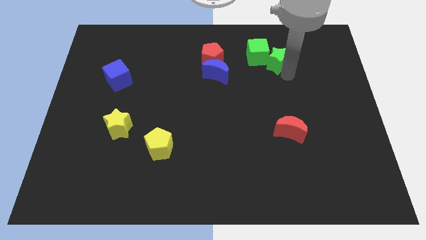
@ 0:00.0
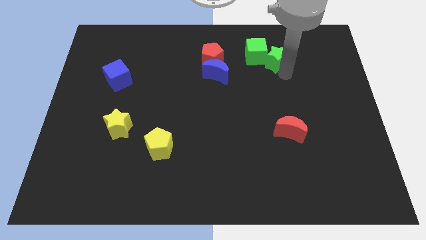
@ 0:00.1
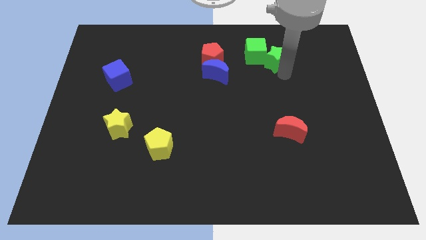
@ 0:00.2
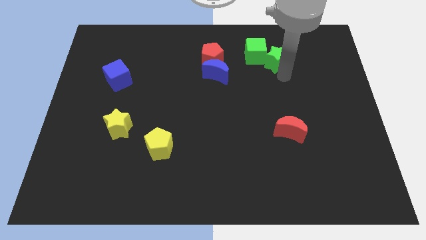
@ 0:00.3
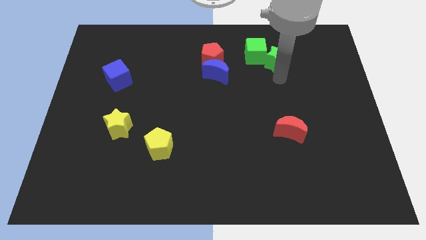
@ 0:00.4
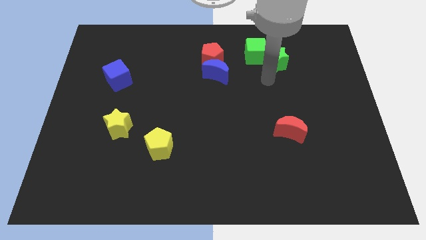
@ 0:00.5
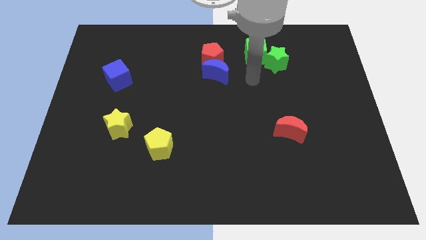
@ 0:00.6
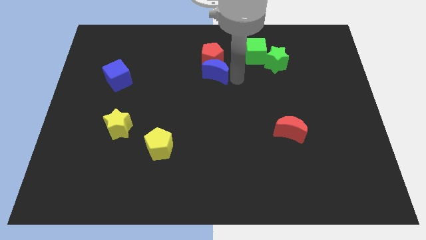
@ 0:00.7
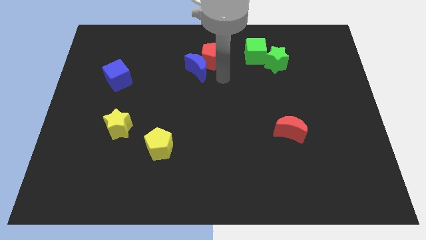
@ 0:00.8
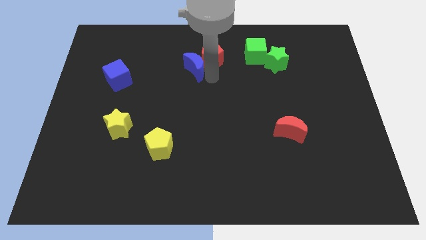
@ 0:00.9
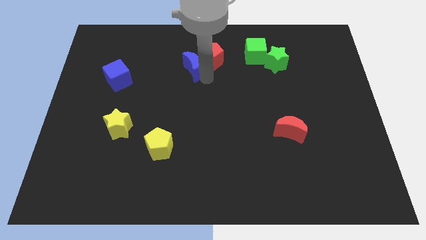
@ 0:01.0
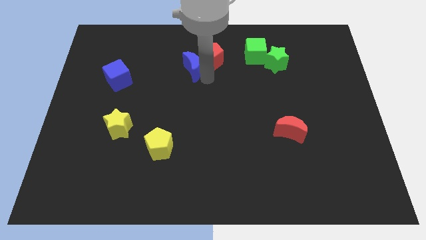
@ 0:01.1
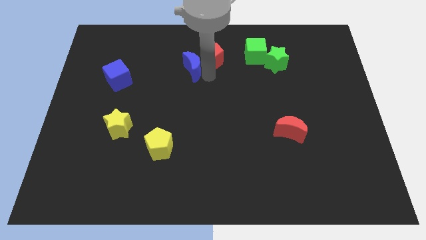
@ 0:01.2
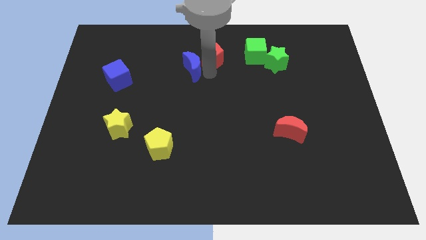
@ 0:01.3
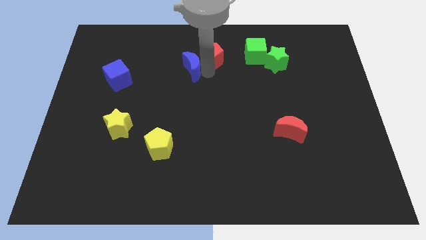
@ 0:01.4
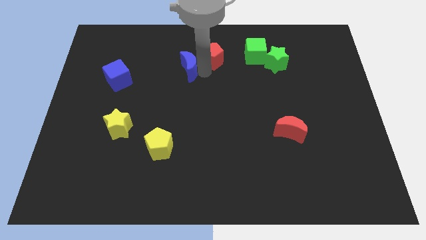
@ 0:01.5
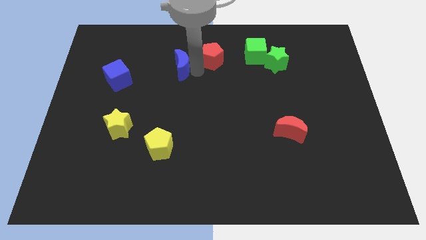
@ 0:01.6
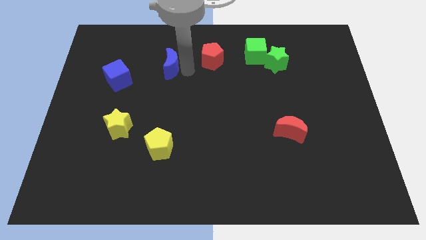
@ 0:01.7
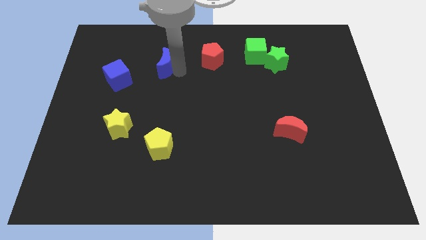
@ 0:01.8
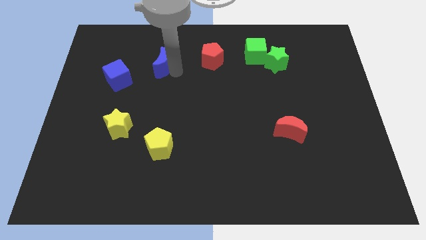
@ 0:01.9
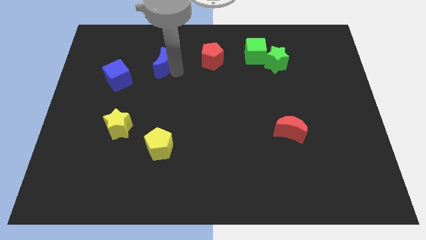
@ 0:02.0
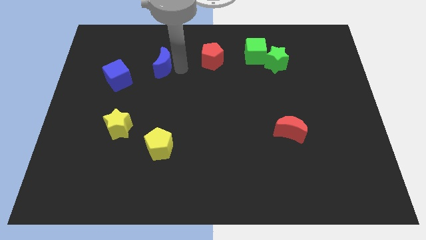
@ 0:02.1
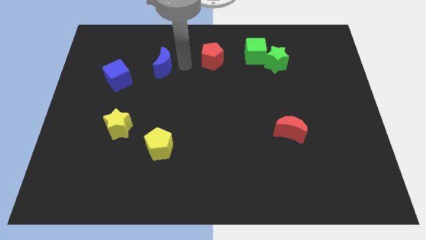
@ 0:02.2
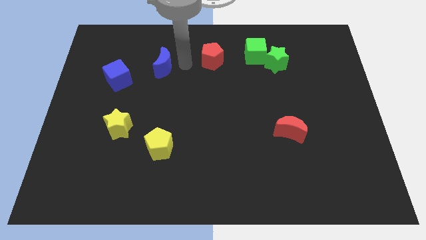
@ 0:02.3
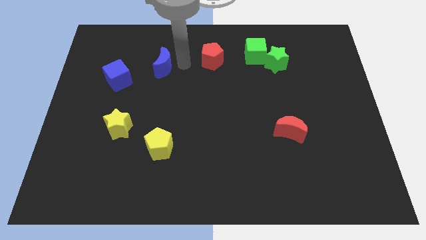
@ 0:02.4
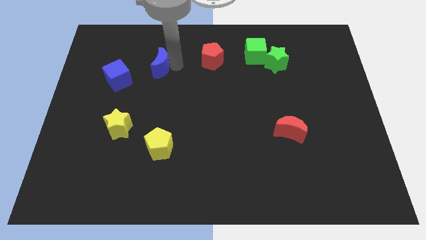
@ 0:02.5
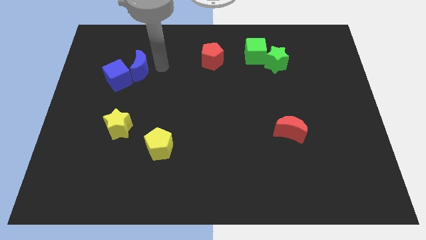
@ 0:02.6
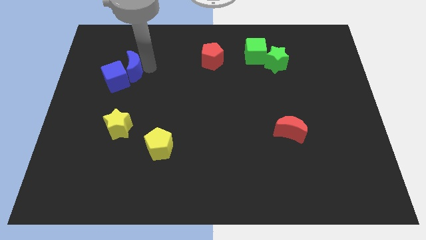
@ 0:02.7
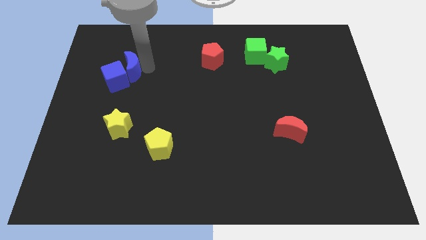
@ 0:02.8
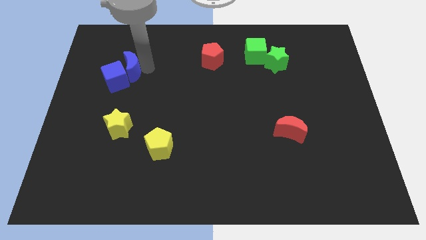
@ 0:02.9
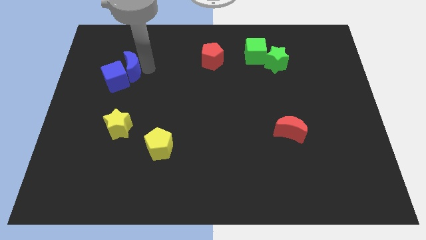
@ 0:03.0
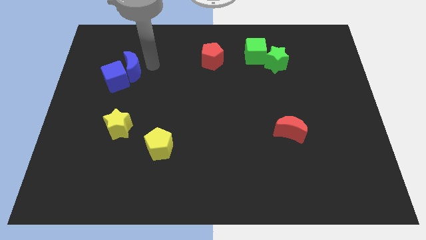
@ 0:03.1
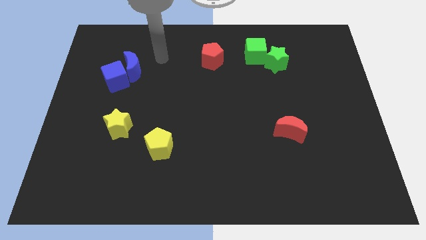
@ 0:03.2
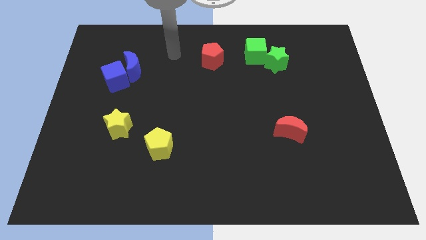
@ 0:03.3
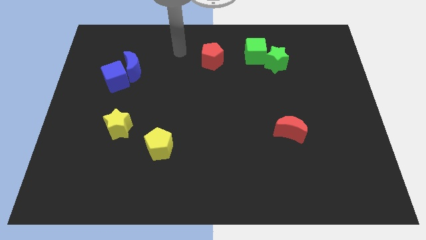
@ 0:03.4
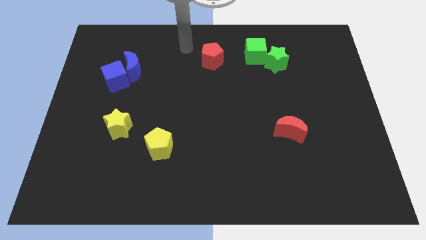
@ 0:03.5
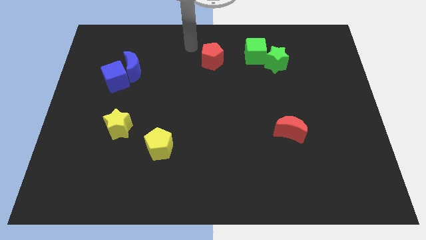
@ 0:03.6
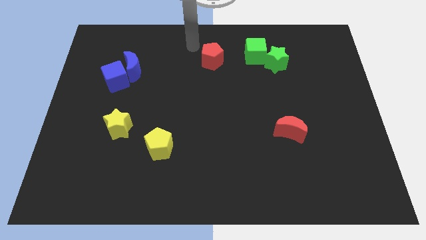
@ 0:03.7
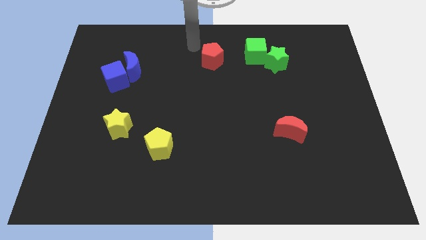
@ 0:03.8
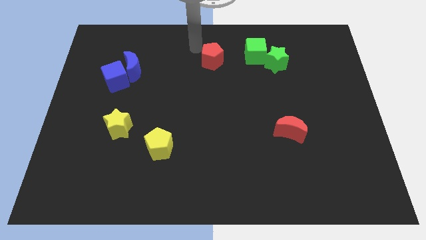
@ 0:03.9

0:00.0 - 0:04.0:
separate the blue moon from the red pentagon

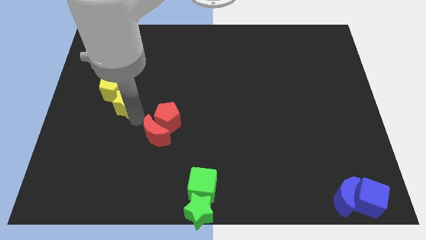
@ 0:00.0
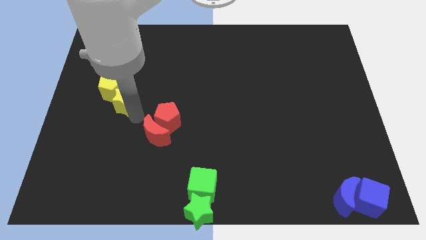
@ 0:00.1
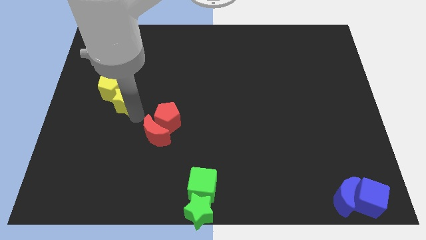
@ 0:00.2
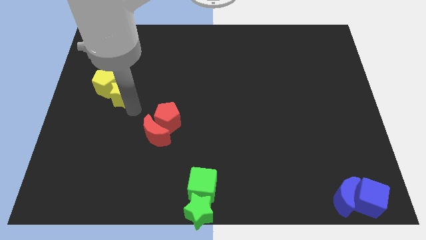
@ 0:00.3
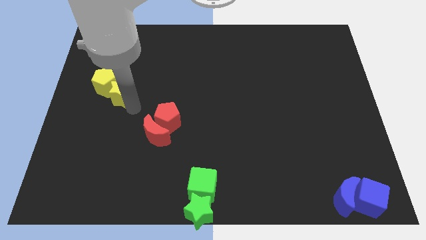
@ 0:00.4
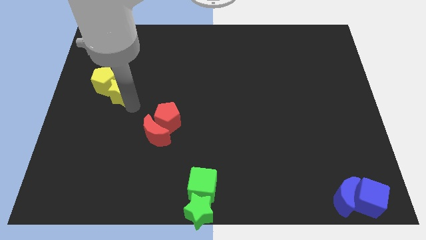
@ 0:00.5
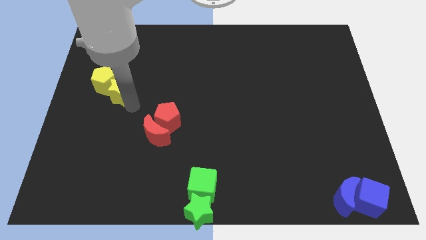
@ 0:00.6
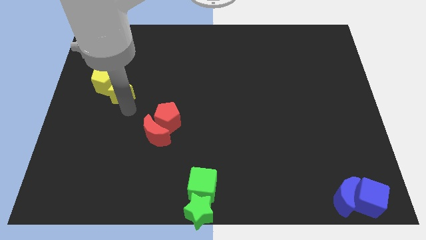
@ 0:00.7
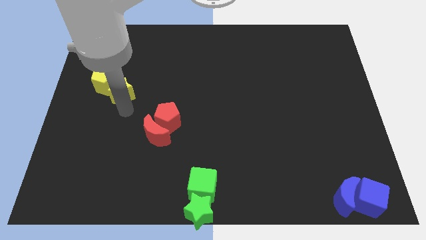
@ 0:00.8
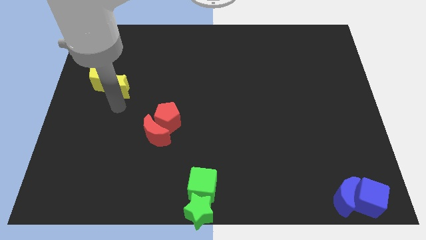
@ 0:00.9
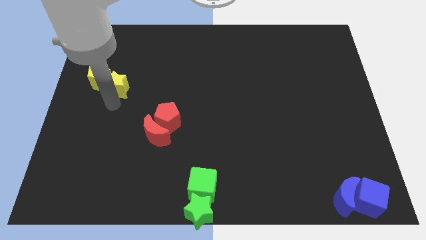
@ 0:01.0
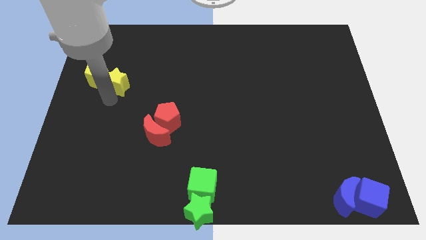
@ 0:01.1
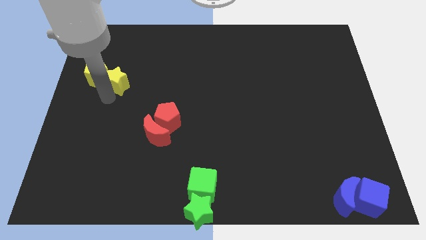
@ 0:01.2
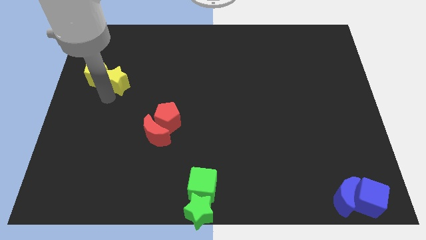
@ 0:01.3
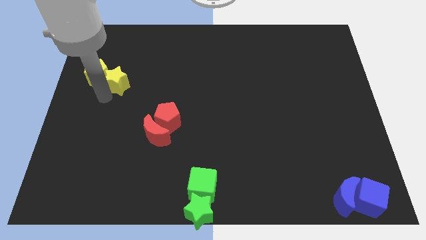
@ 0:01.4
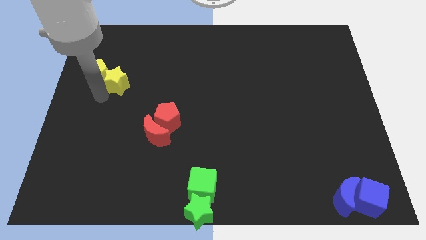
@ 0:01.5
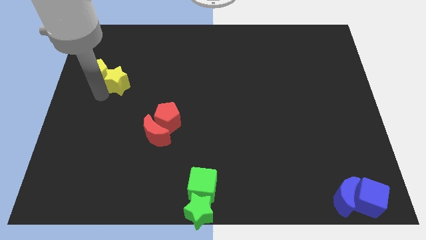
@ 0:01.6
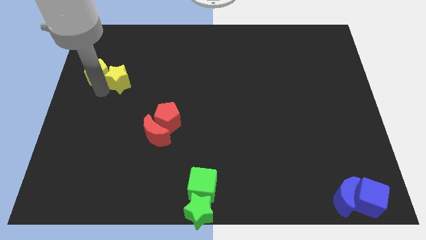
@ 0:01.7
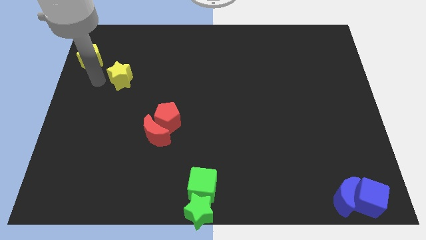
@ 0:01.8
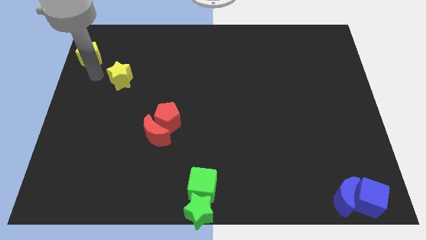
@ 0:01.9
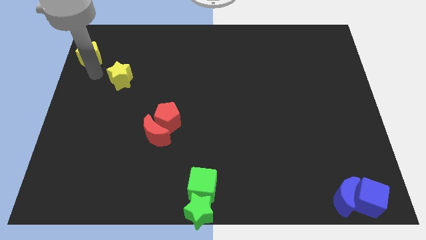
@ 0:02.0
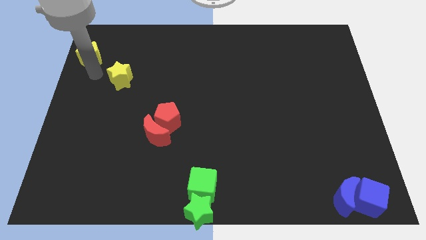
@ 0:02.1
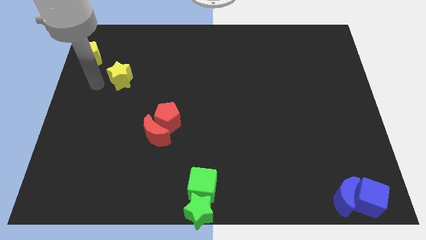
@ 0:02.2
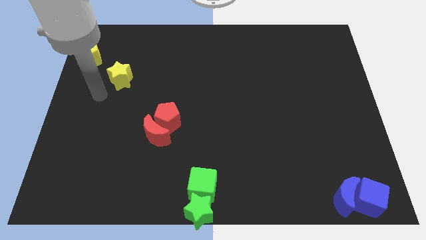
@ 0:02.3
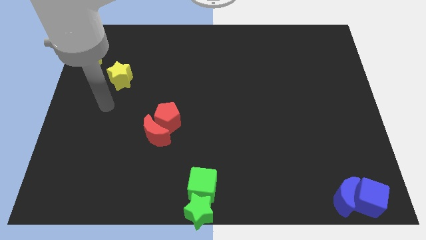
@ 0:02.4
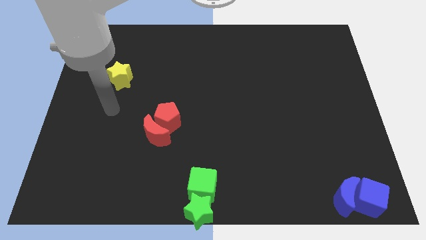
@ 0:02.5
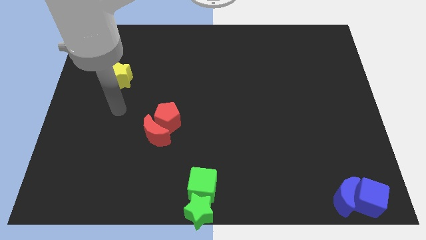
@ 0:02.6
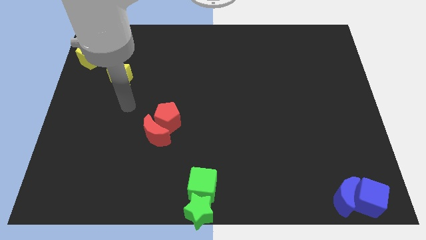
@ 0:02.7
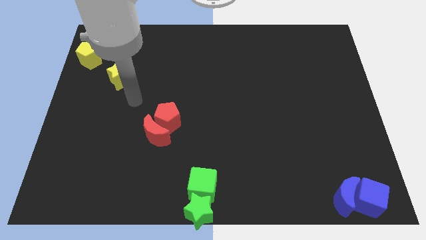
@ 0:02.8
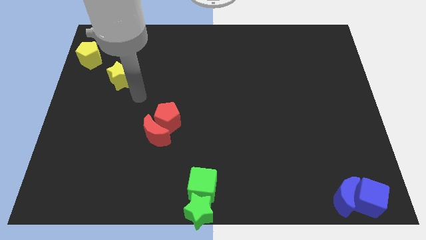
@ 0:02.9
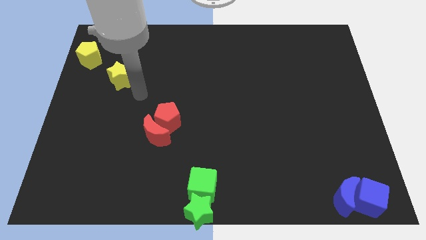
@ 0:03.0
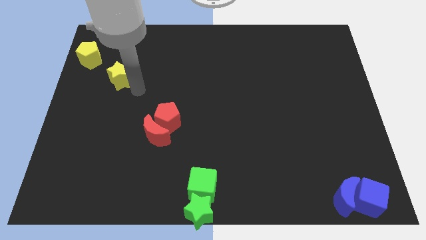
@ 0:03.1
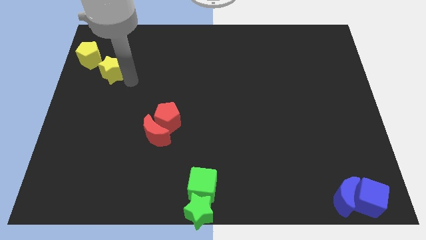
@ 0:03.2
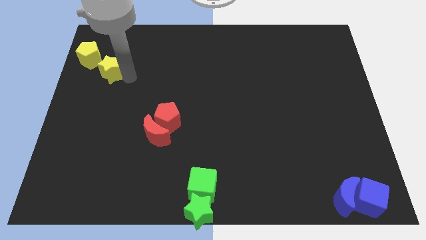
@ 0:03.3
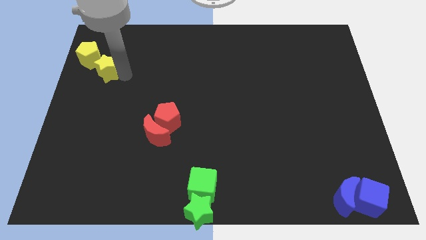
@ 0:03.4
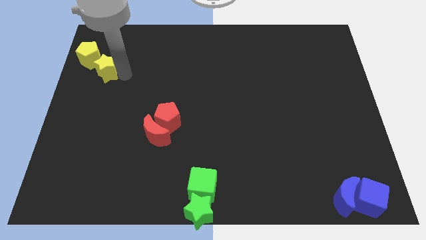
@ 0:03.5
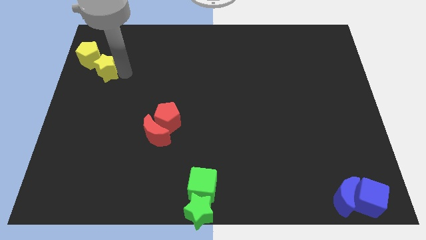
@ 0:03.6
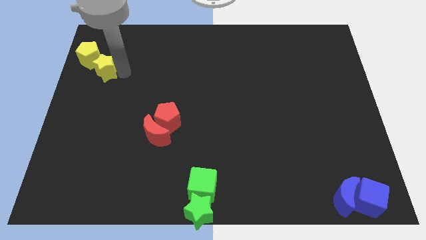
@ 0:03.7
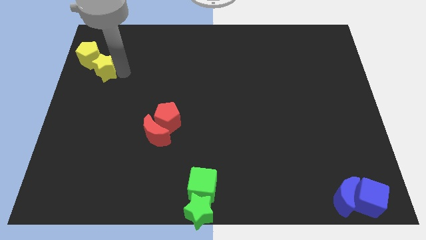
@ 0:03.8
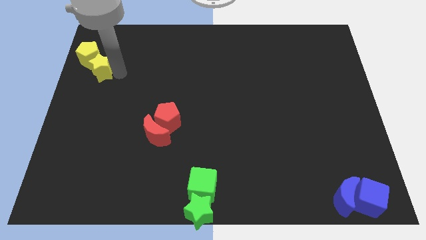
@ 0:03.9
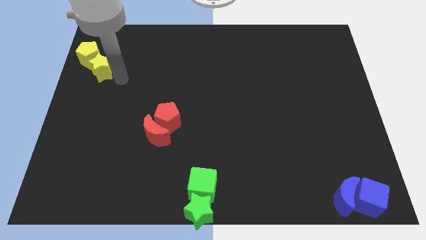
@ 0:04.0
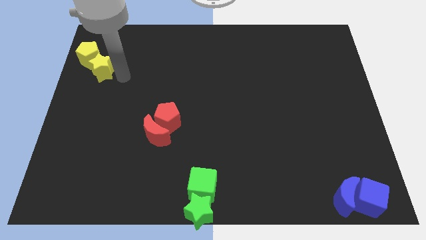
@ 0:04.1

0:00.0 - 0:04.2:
push the yellow star into the yellow pentagon

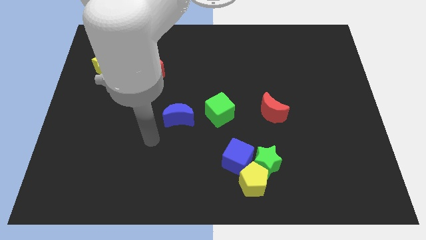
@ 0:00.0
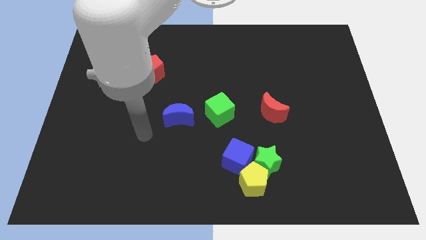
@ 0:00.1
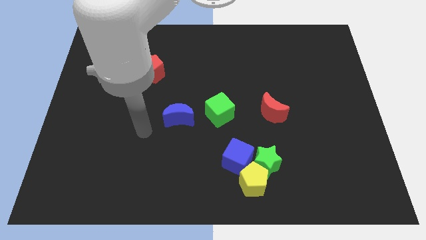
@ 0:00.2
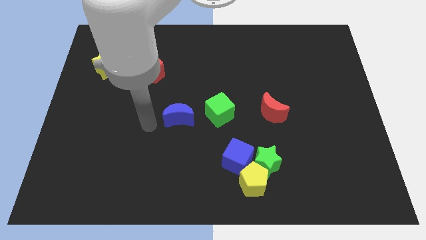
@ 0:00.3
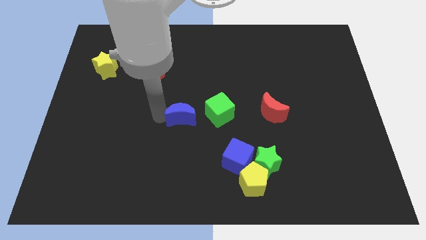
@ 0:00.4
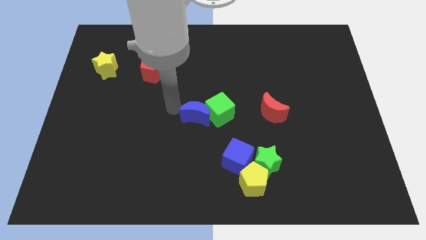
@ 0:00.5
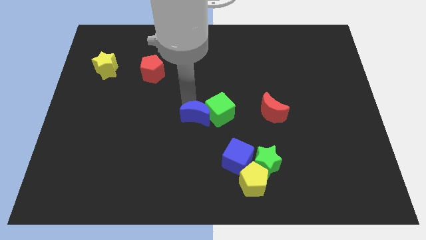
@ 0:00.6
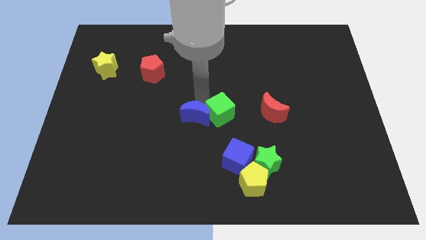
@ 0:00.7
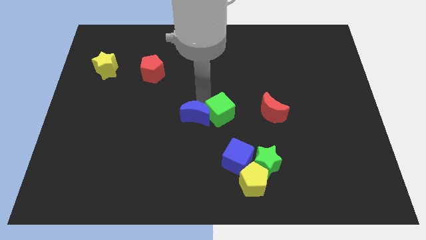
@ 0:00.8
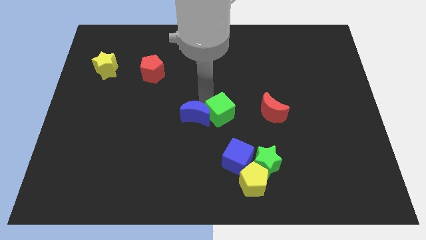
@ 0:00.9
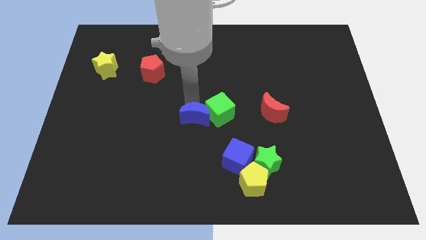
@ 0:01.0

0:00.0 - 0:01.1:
move the blue crescent to the left of the green cube
